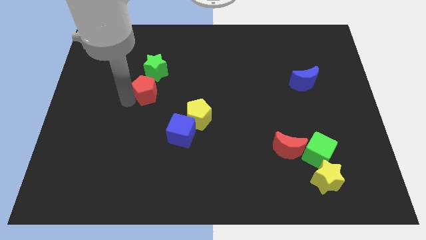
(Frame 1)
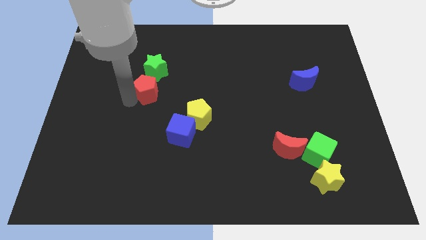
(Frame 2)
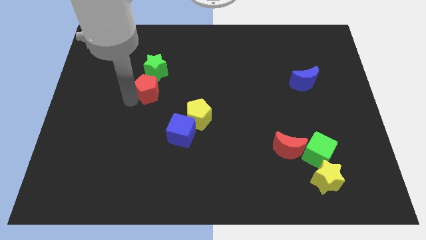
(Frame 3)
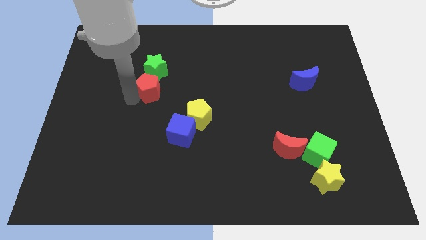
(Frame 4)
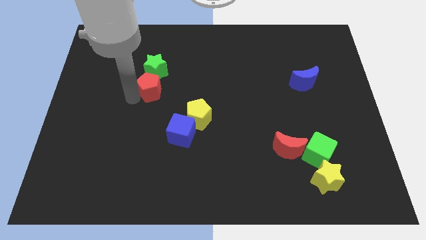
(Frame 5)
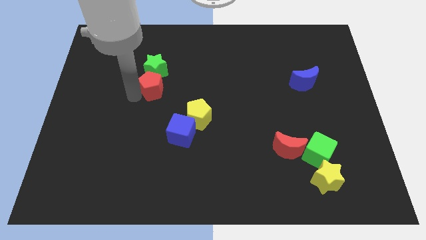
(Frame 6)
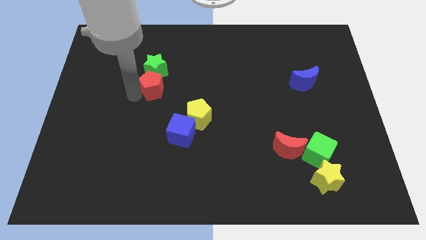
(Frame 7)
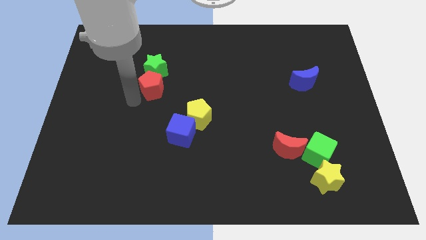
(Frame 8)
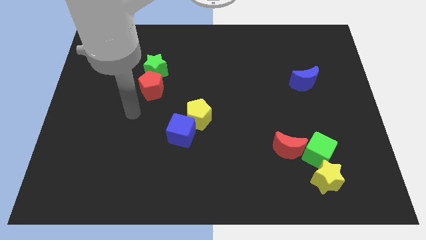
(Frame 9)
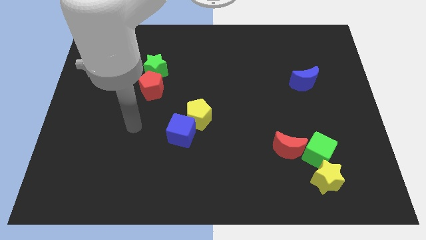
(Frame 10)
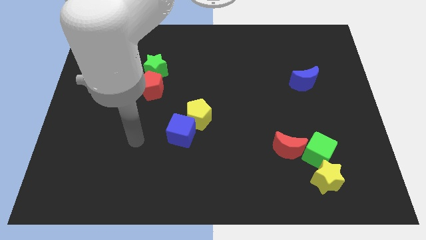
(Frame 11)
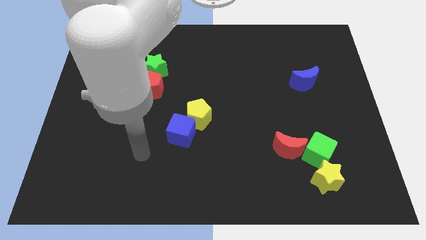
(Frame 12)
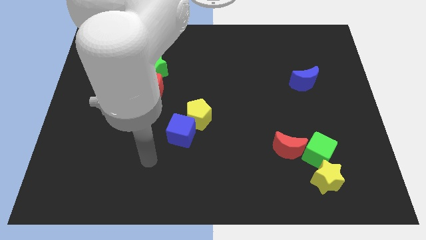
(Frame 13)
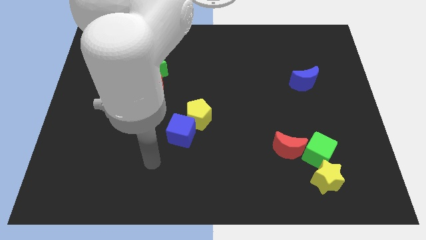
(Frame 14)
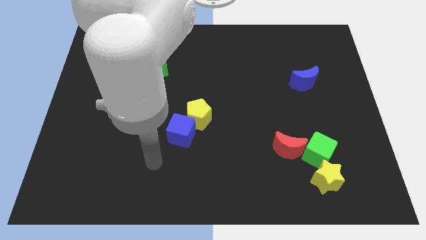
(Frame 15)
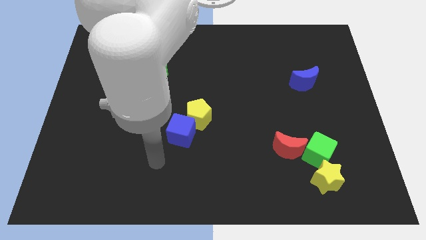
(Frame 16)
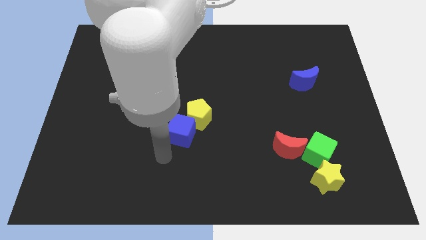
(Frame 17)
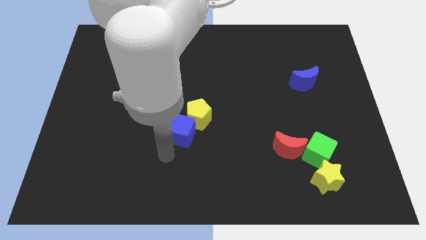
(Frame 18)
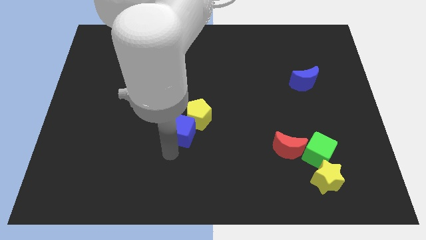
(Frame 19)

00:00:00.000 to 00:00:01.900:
place your arm below blue cube

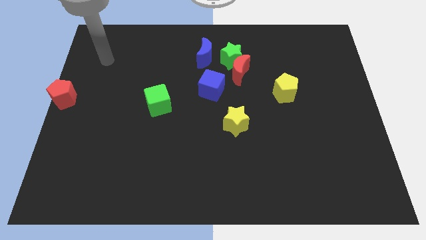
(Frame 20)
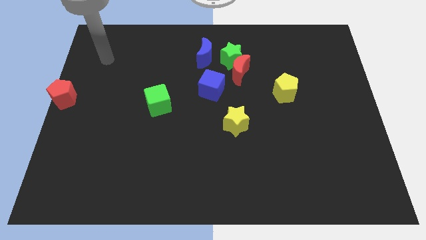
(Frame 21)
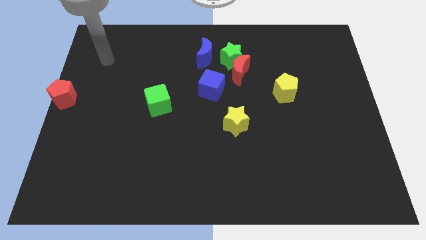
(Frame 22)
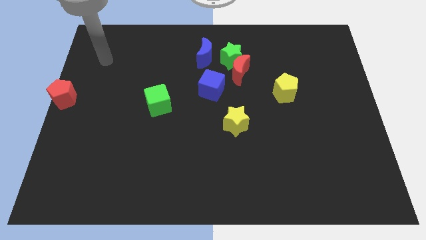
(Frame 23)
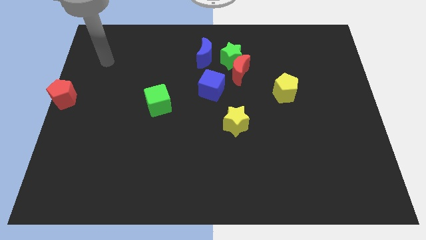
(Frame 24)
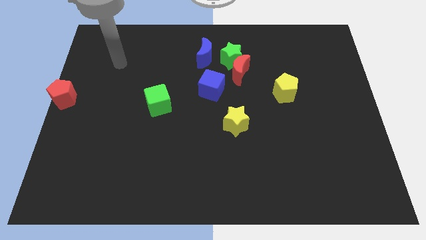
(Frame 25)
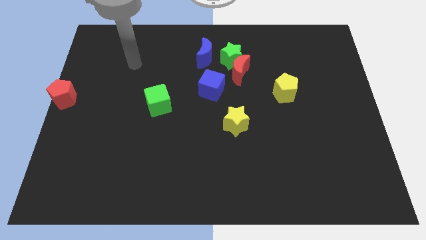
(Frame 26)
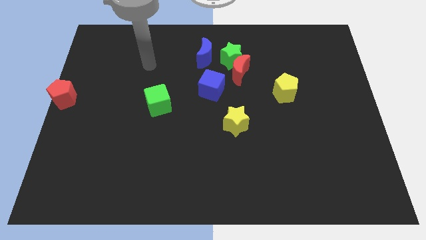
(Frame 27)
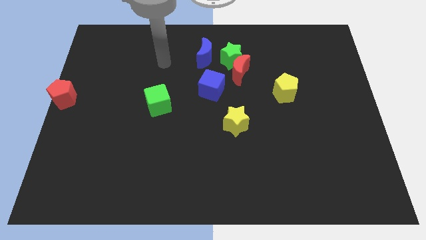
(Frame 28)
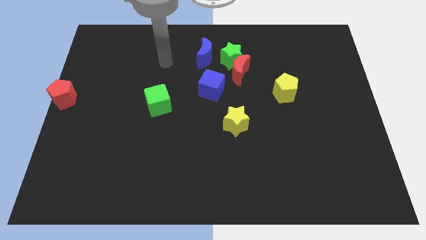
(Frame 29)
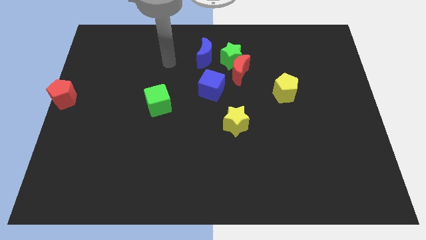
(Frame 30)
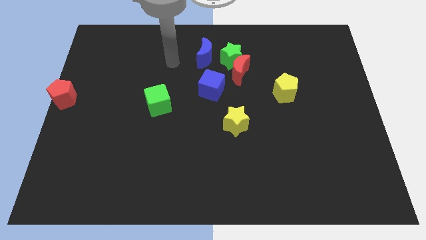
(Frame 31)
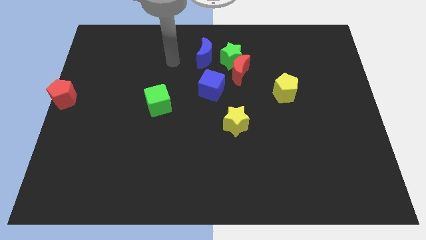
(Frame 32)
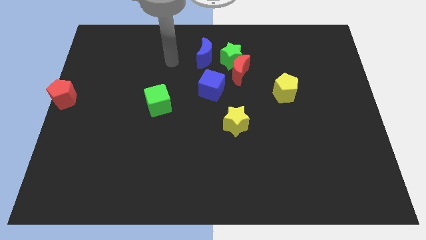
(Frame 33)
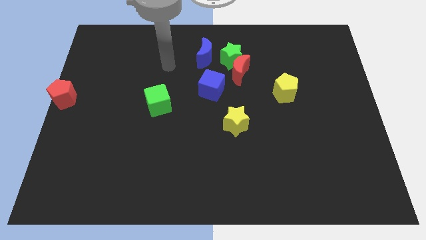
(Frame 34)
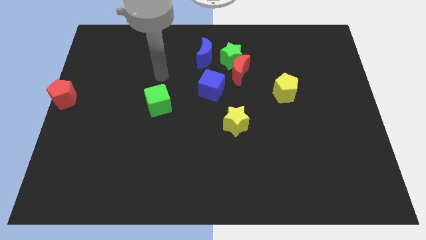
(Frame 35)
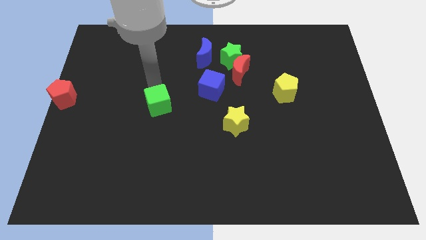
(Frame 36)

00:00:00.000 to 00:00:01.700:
move the arm towards top of the green cube

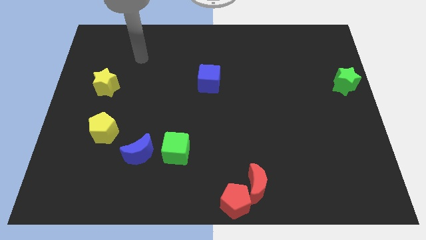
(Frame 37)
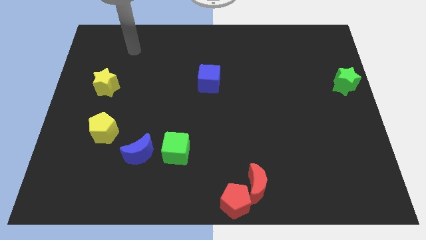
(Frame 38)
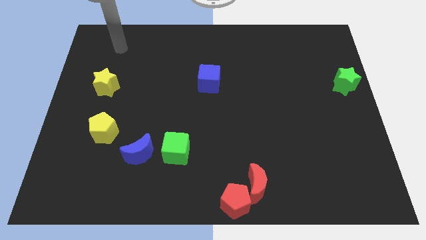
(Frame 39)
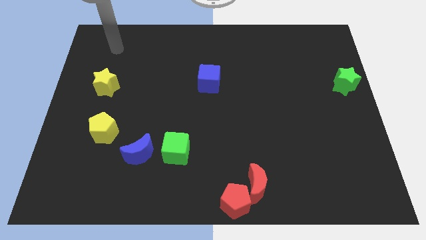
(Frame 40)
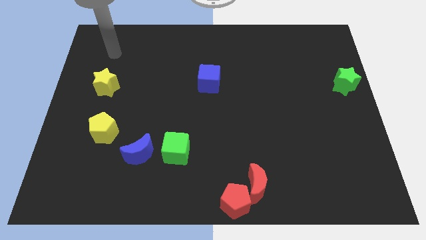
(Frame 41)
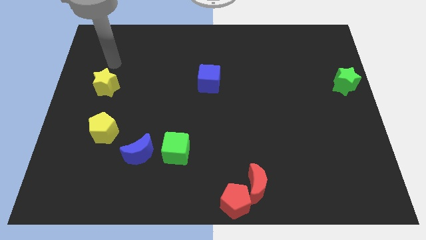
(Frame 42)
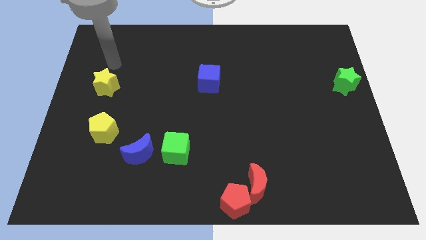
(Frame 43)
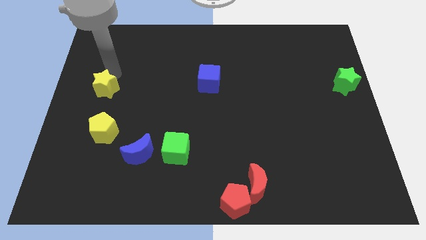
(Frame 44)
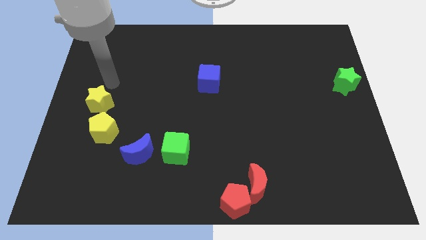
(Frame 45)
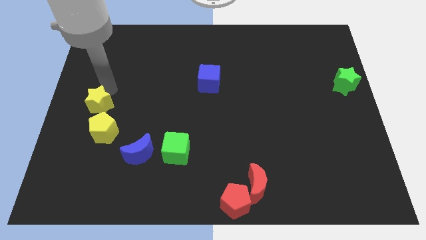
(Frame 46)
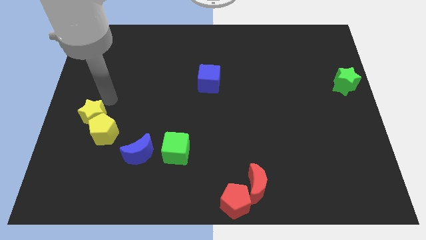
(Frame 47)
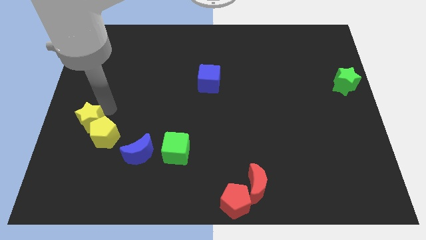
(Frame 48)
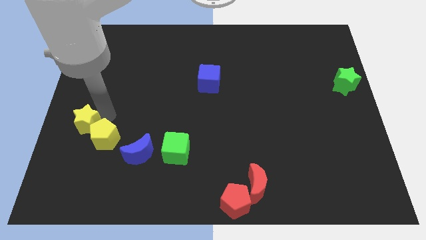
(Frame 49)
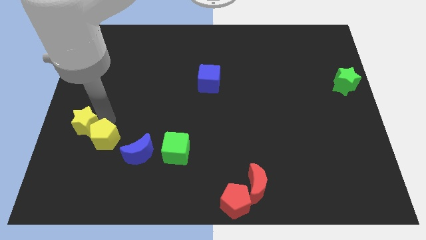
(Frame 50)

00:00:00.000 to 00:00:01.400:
move the yellow star into the yellow pentagon

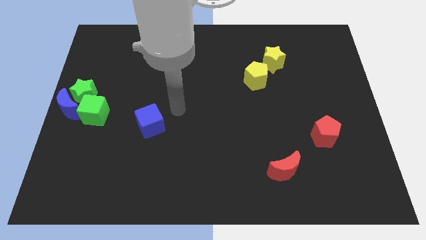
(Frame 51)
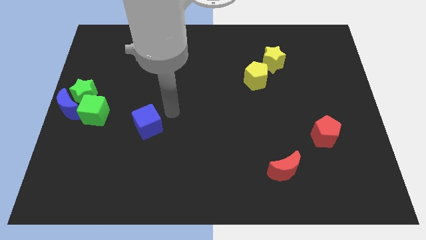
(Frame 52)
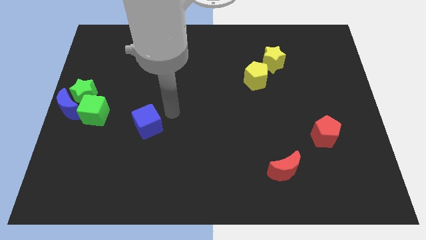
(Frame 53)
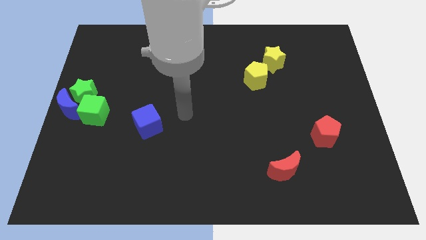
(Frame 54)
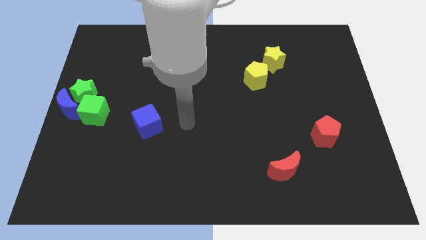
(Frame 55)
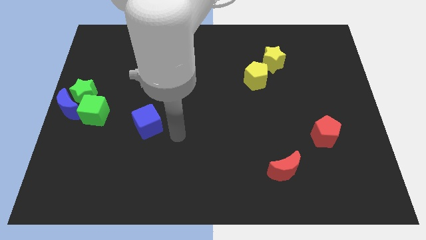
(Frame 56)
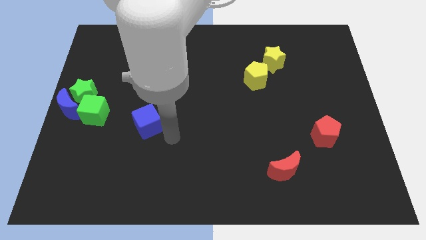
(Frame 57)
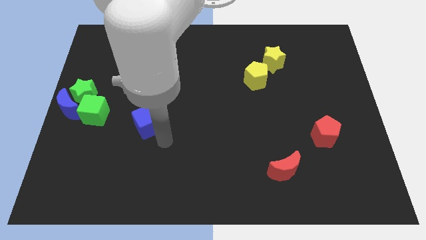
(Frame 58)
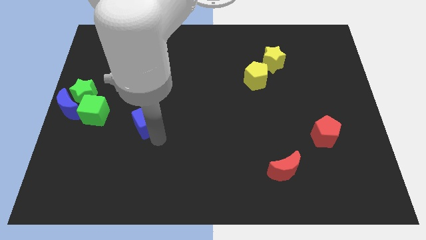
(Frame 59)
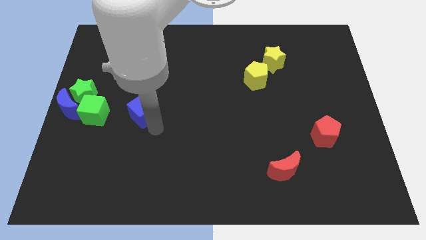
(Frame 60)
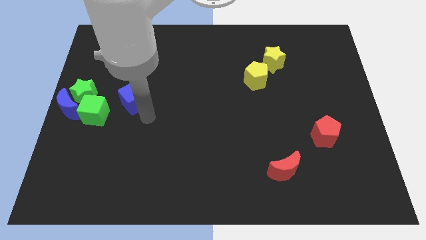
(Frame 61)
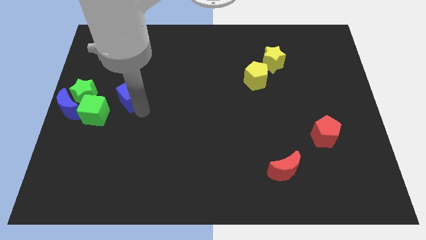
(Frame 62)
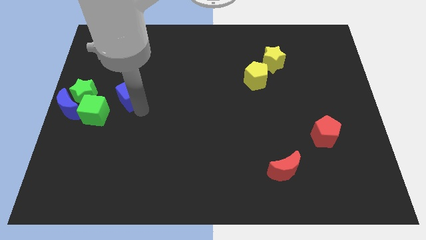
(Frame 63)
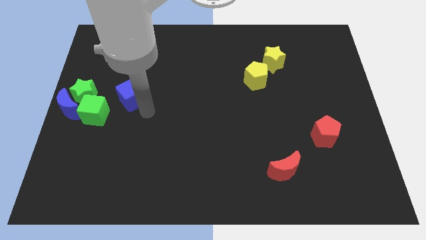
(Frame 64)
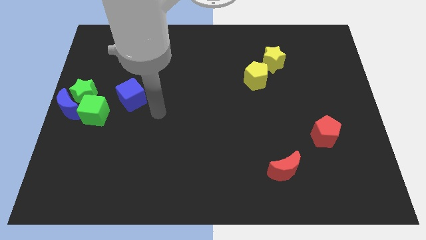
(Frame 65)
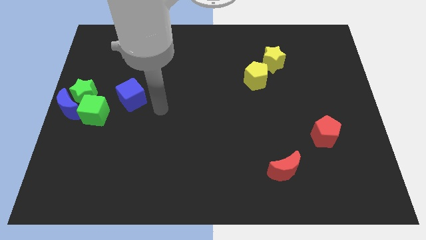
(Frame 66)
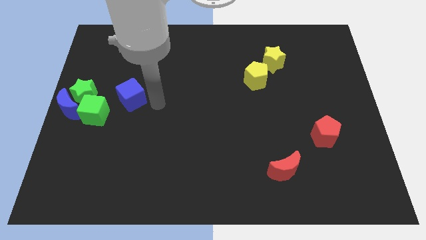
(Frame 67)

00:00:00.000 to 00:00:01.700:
push the blue cube towards the green cube and green star

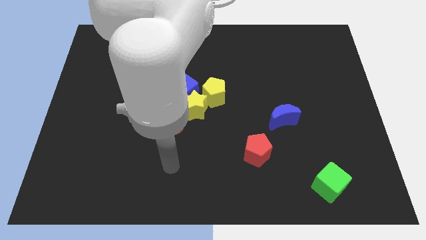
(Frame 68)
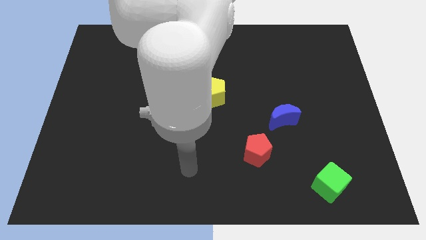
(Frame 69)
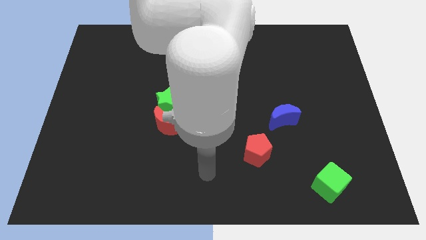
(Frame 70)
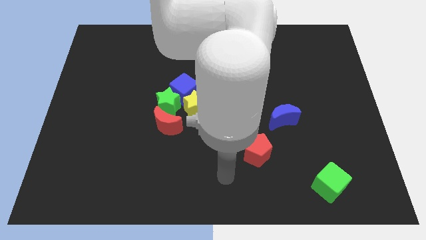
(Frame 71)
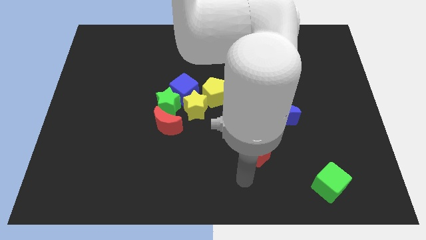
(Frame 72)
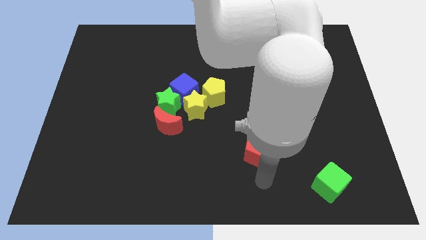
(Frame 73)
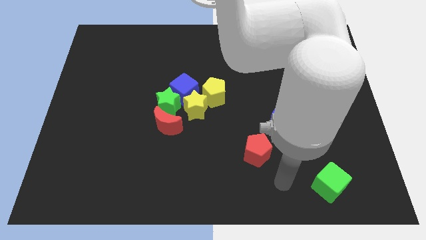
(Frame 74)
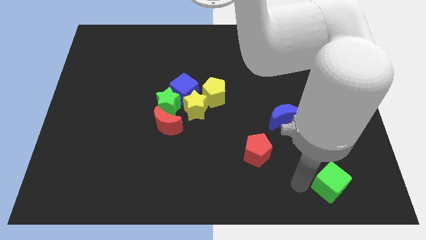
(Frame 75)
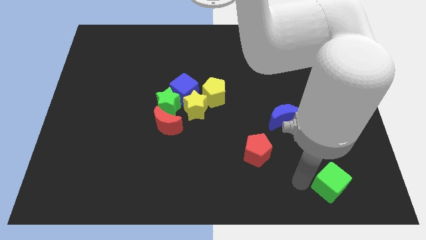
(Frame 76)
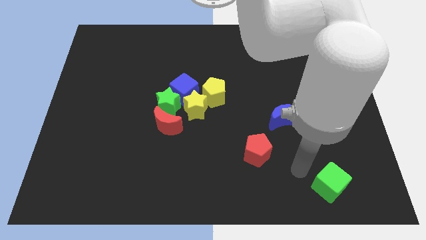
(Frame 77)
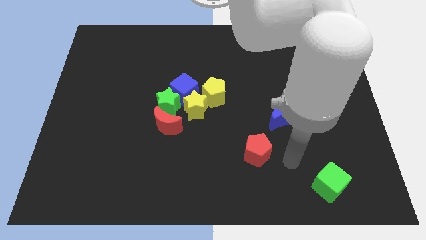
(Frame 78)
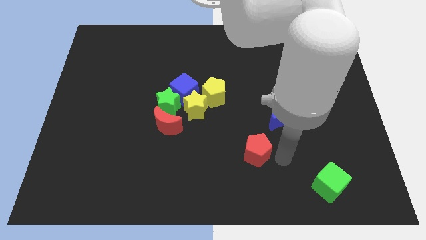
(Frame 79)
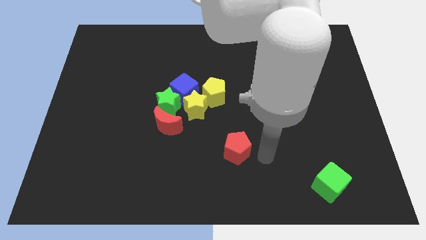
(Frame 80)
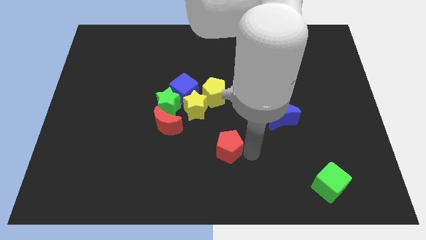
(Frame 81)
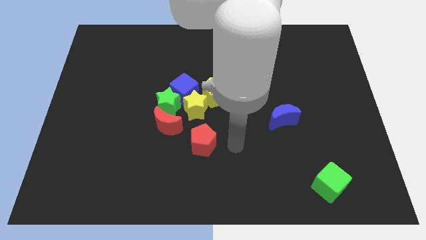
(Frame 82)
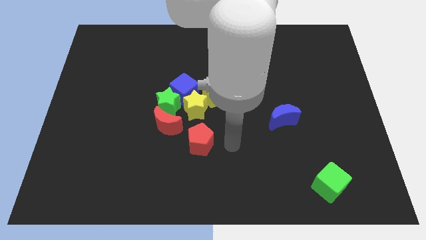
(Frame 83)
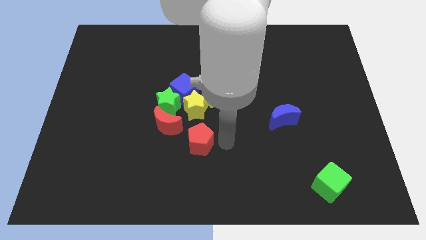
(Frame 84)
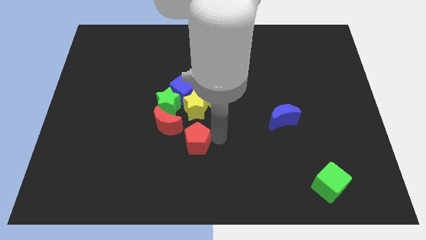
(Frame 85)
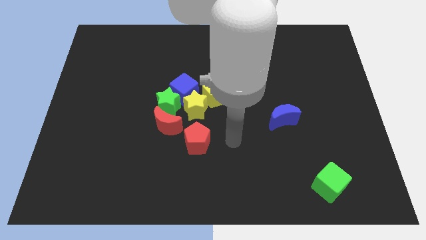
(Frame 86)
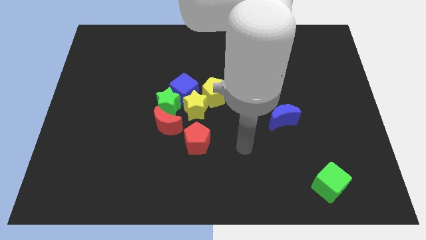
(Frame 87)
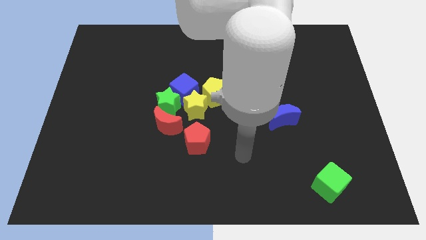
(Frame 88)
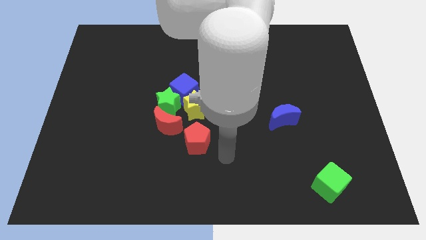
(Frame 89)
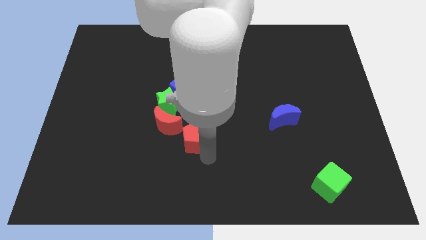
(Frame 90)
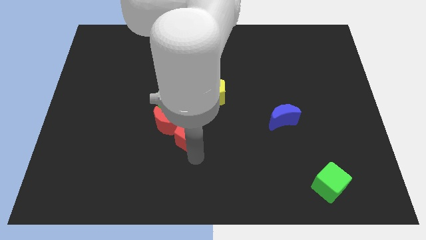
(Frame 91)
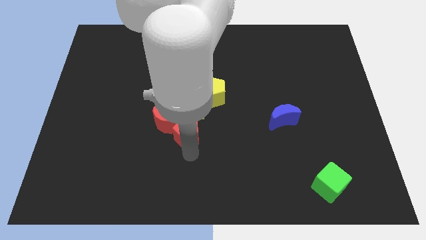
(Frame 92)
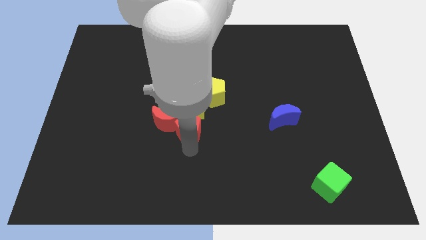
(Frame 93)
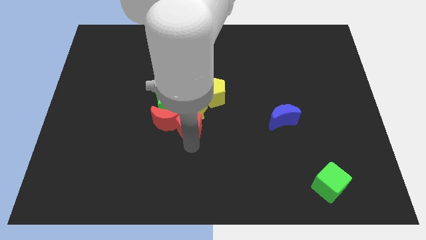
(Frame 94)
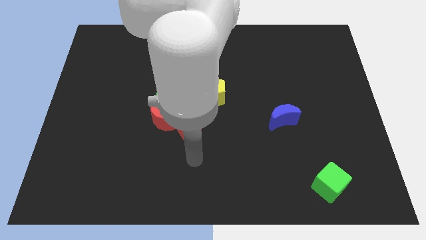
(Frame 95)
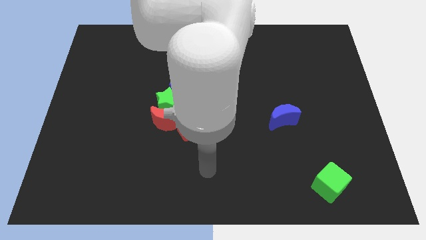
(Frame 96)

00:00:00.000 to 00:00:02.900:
push the red pentagon into the red crescent
